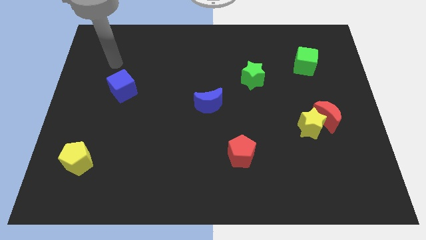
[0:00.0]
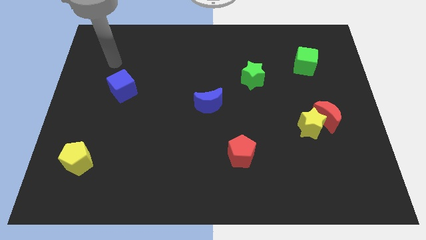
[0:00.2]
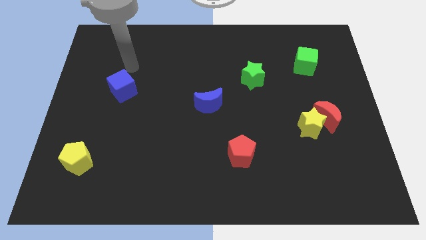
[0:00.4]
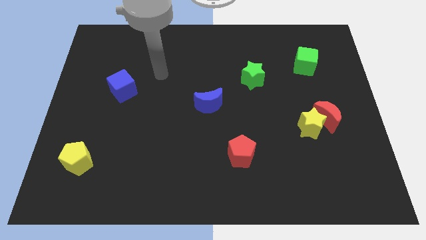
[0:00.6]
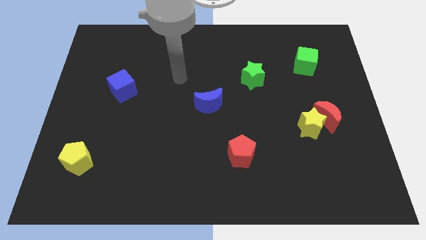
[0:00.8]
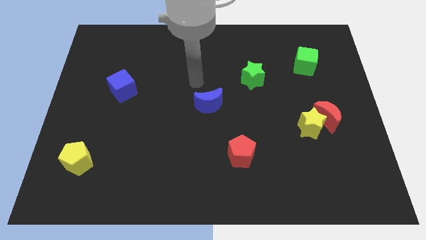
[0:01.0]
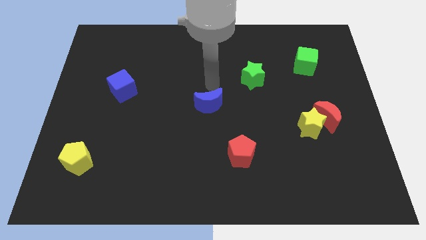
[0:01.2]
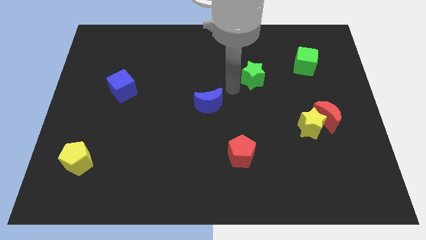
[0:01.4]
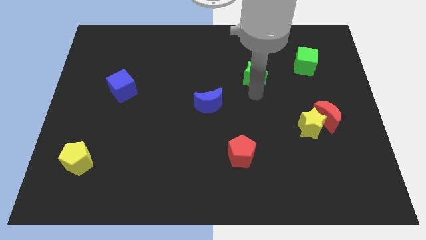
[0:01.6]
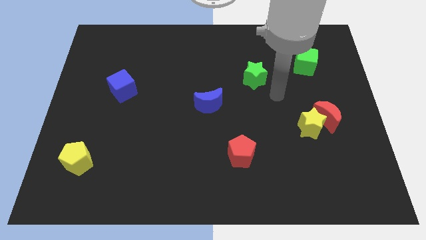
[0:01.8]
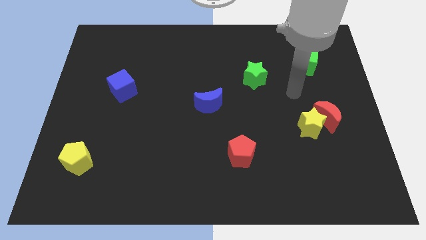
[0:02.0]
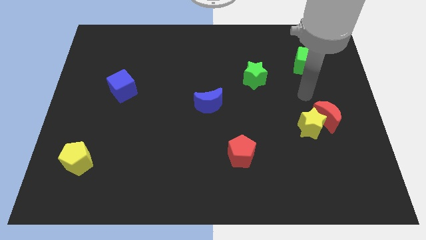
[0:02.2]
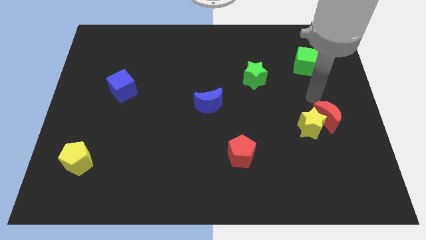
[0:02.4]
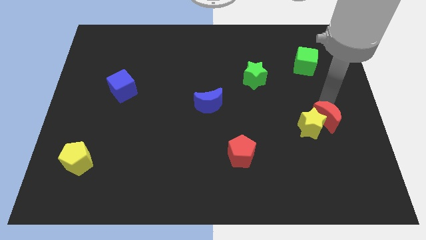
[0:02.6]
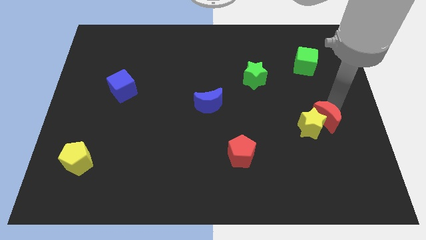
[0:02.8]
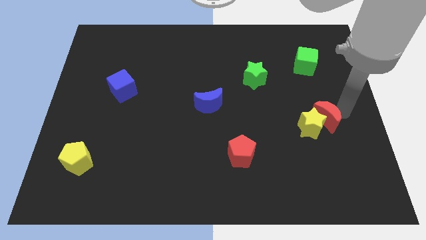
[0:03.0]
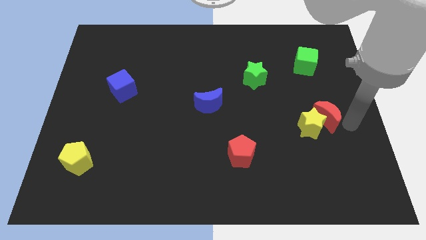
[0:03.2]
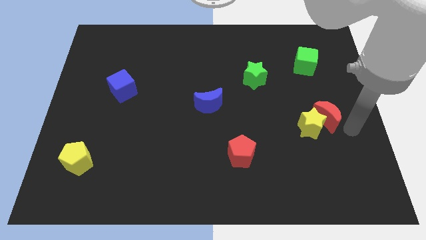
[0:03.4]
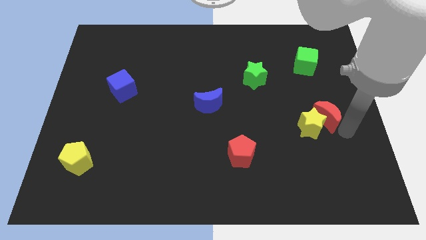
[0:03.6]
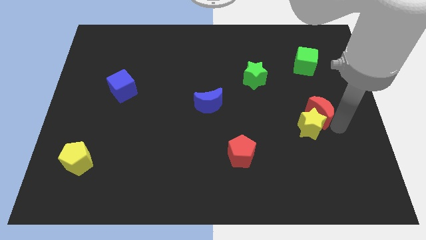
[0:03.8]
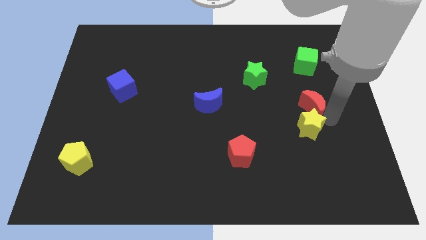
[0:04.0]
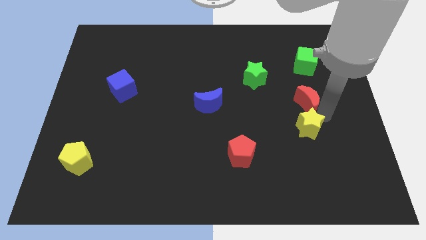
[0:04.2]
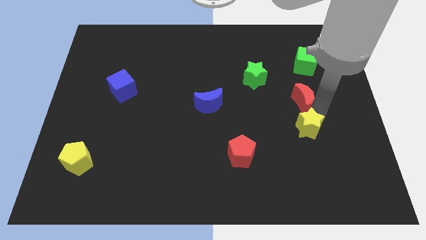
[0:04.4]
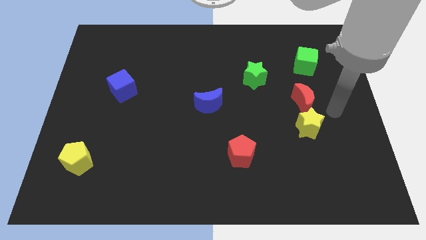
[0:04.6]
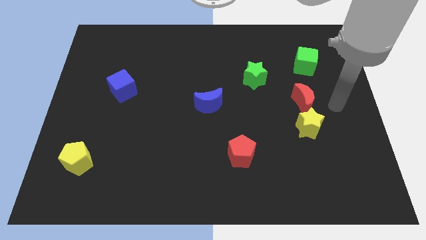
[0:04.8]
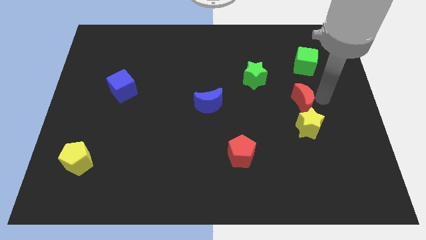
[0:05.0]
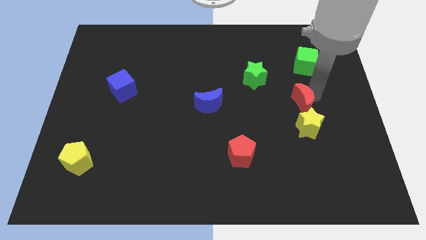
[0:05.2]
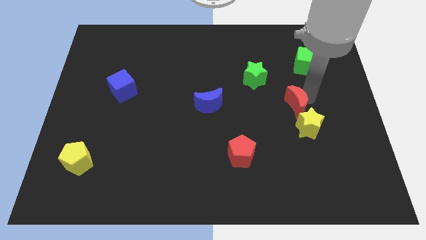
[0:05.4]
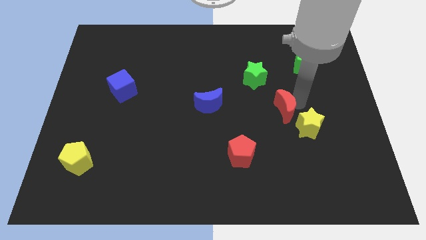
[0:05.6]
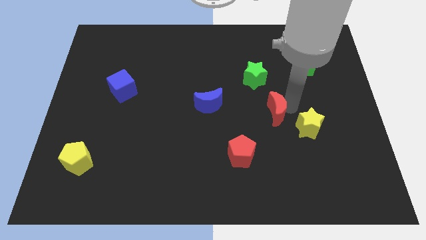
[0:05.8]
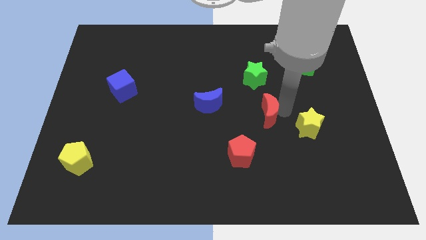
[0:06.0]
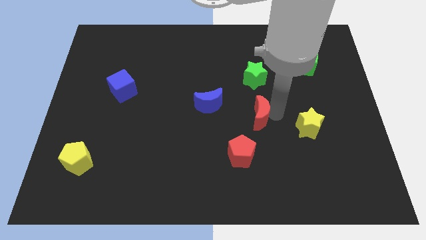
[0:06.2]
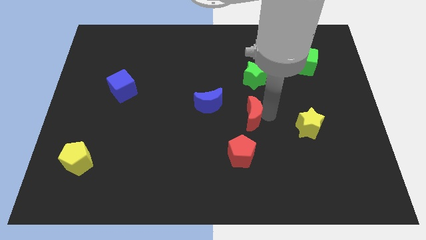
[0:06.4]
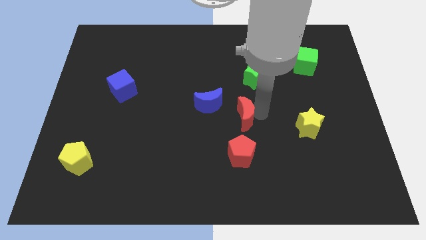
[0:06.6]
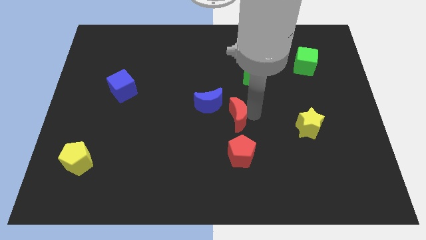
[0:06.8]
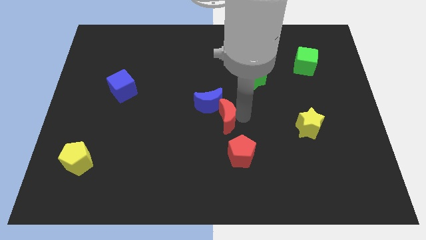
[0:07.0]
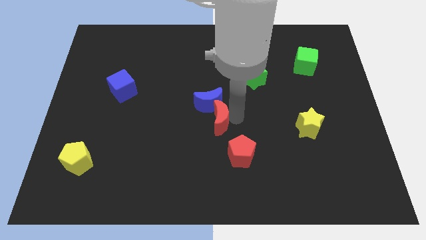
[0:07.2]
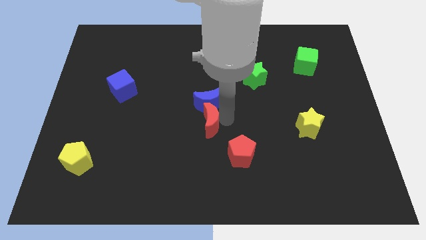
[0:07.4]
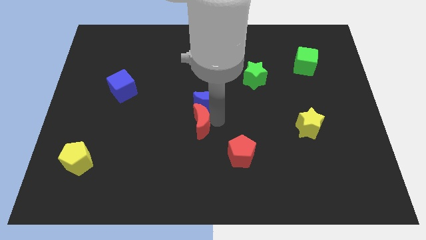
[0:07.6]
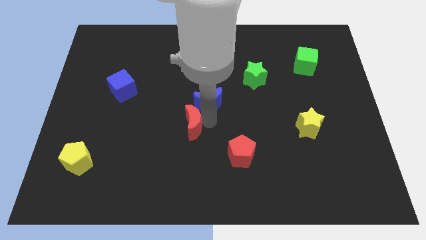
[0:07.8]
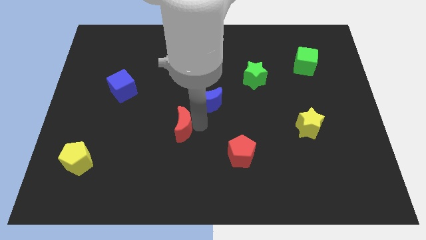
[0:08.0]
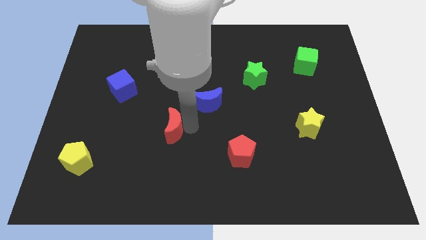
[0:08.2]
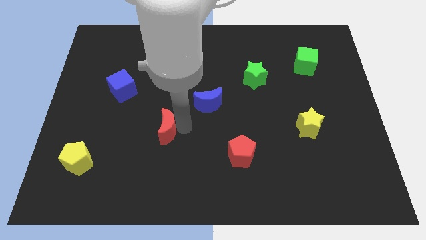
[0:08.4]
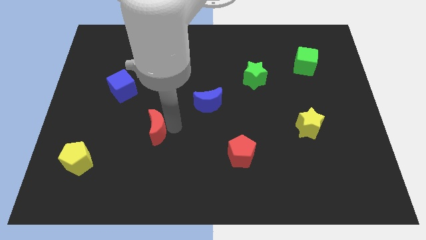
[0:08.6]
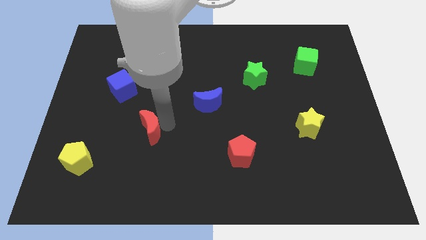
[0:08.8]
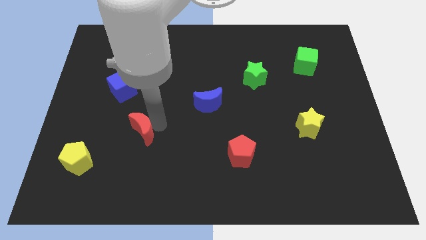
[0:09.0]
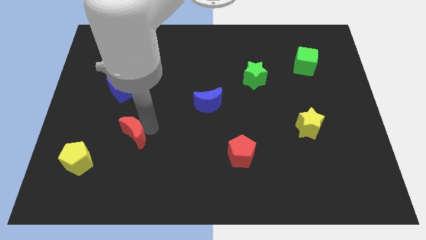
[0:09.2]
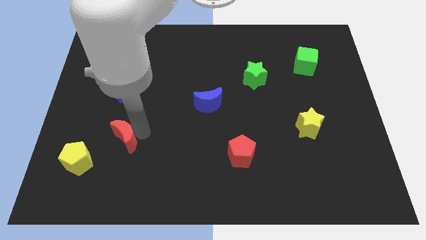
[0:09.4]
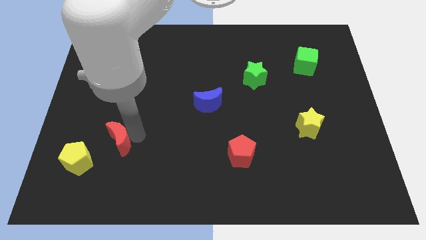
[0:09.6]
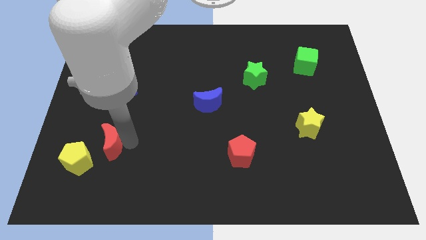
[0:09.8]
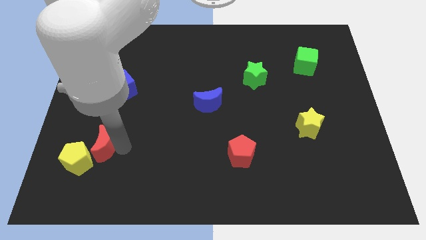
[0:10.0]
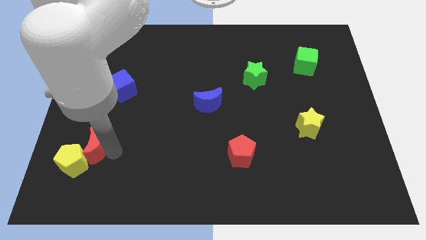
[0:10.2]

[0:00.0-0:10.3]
move the red moon to the yellow pentagon

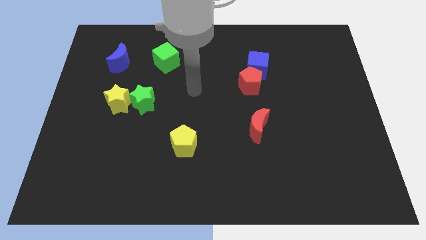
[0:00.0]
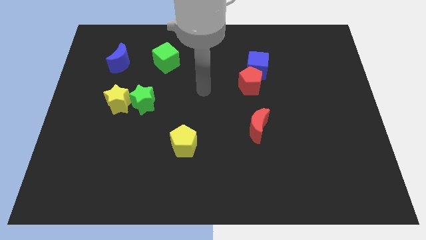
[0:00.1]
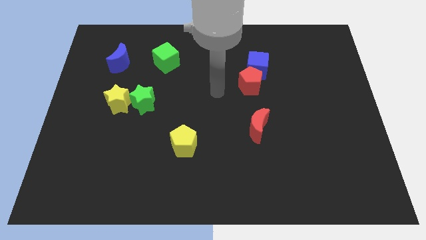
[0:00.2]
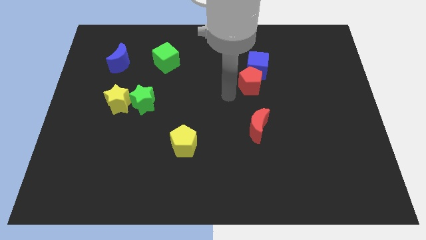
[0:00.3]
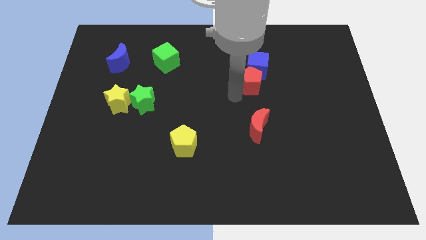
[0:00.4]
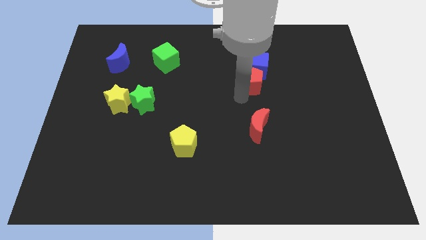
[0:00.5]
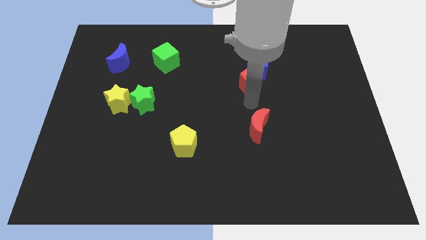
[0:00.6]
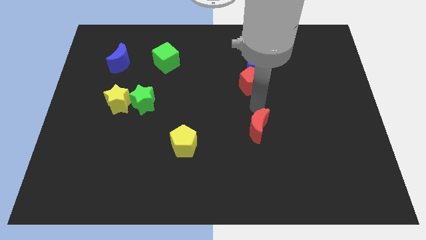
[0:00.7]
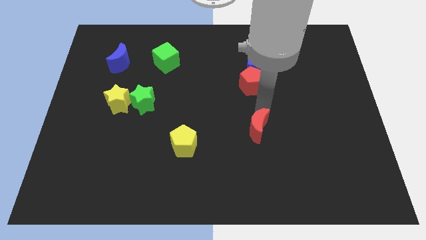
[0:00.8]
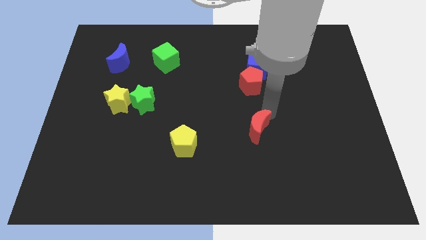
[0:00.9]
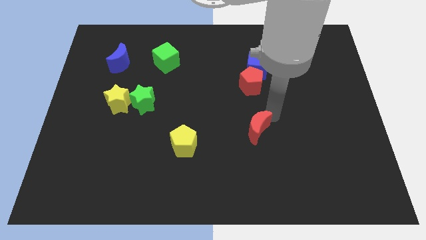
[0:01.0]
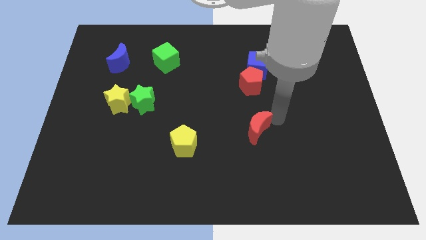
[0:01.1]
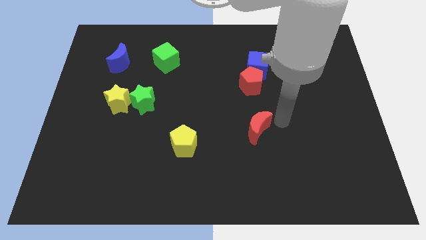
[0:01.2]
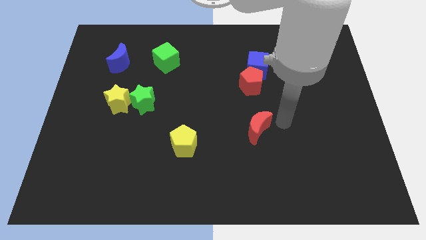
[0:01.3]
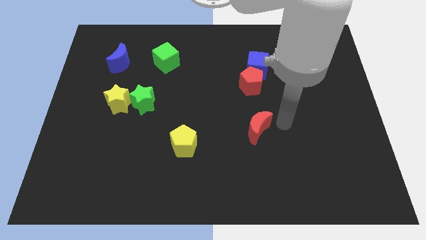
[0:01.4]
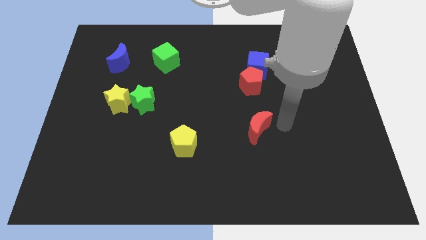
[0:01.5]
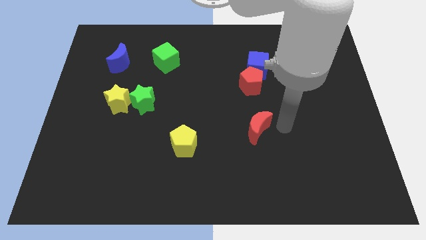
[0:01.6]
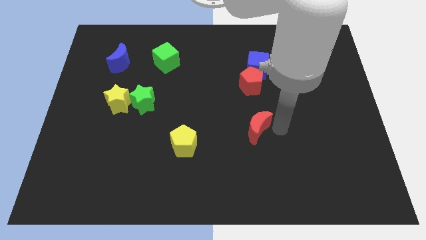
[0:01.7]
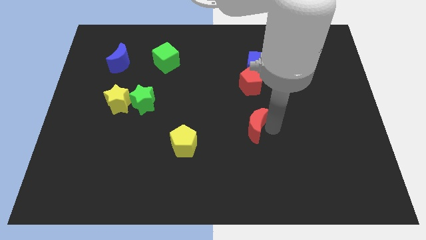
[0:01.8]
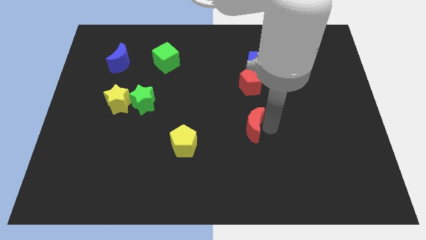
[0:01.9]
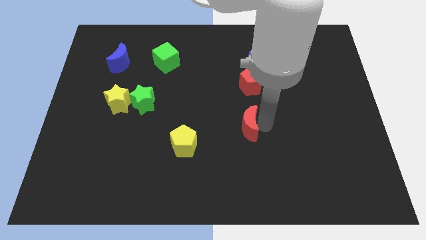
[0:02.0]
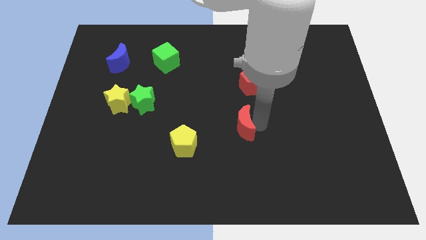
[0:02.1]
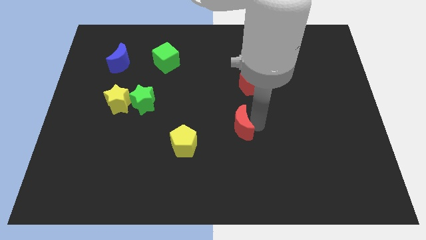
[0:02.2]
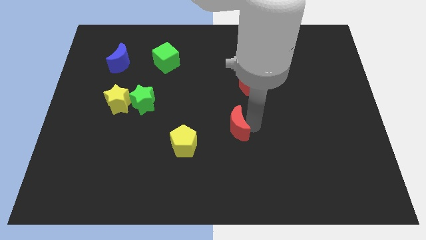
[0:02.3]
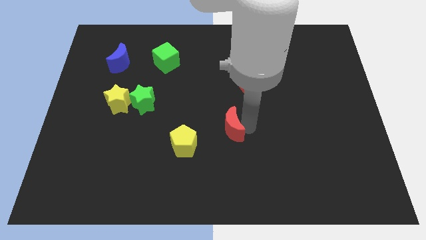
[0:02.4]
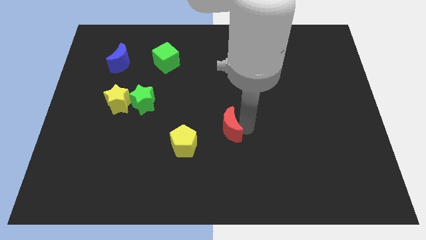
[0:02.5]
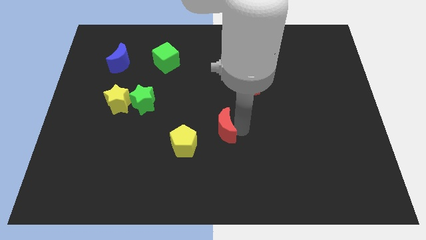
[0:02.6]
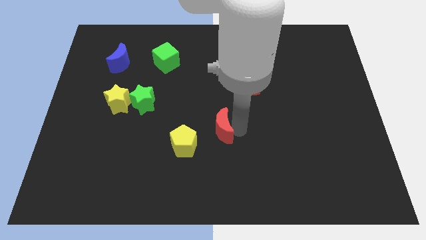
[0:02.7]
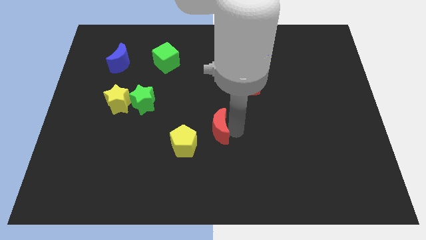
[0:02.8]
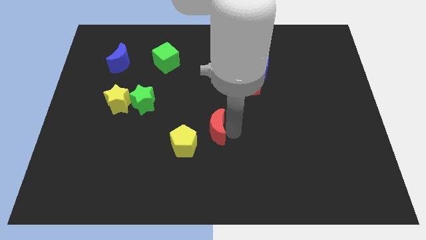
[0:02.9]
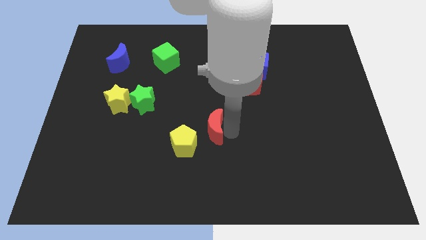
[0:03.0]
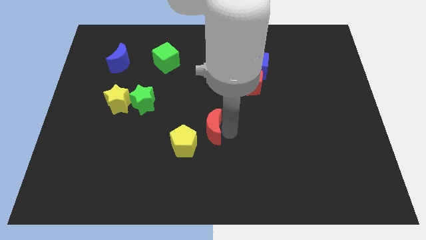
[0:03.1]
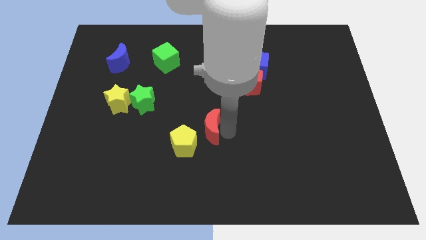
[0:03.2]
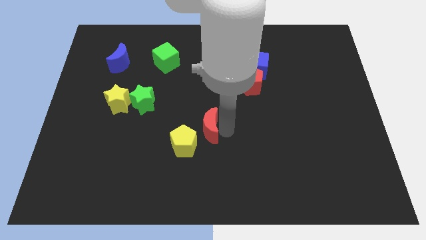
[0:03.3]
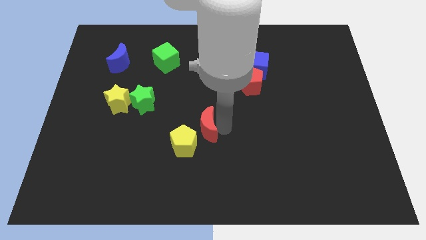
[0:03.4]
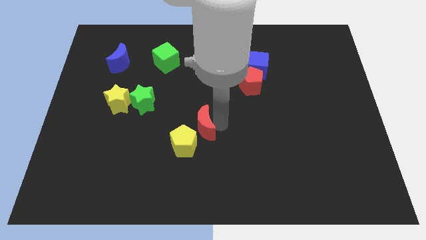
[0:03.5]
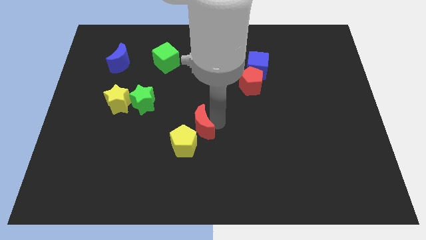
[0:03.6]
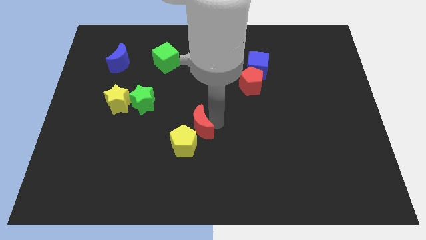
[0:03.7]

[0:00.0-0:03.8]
push the red moon close to the yellow pentagon
